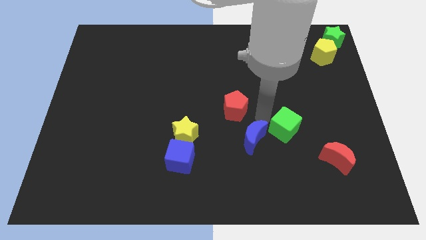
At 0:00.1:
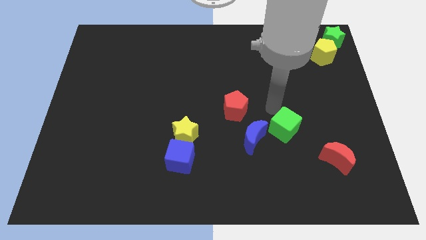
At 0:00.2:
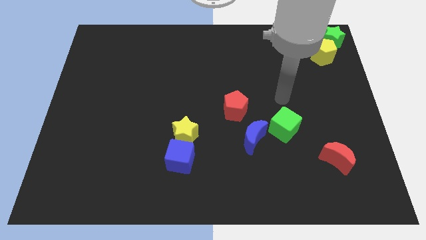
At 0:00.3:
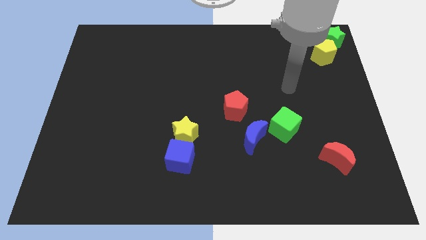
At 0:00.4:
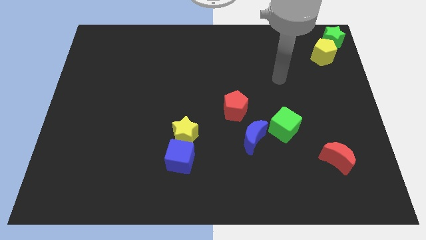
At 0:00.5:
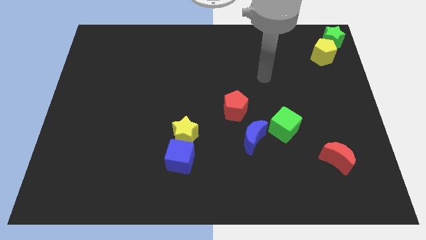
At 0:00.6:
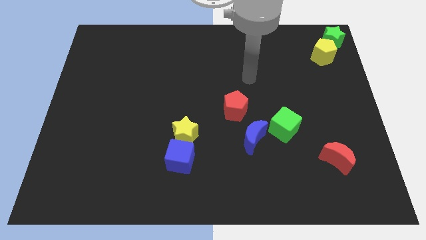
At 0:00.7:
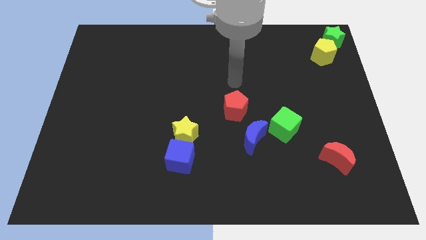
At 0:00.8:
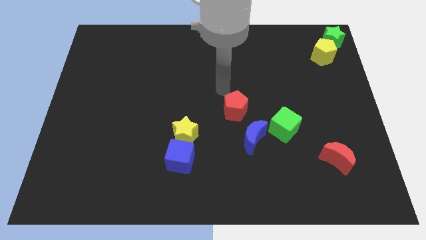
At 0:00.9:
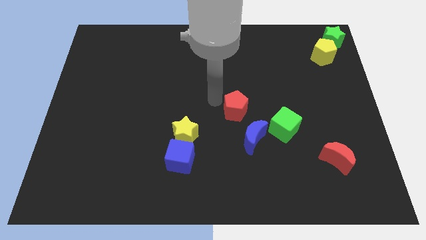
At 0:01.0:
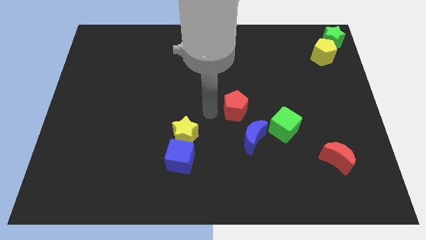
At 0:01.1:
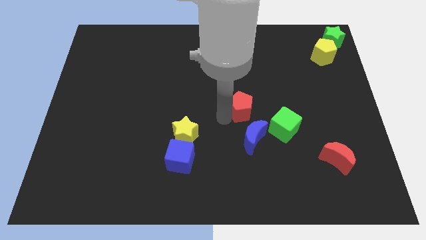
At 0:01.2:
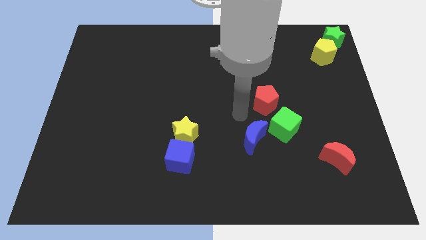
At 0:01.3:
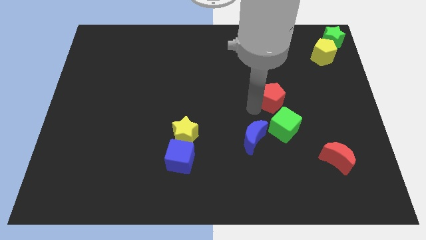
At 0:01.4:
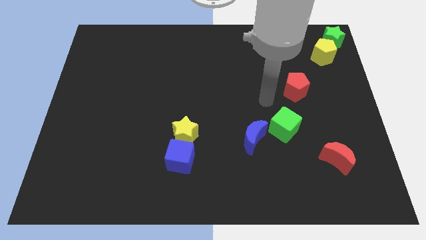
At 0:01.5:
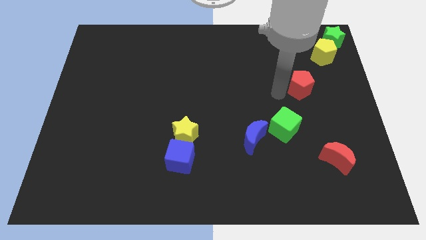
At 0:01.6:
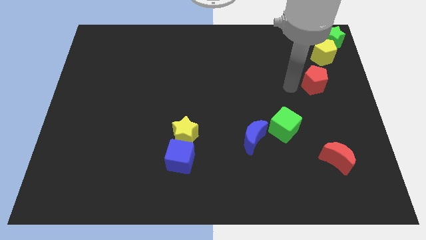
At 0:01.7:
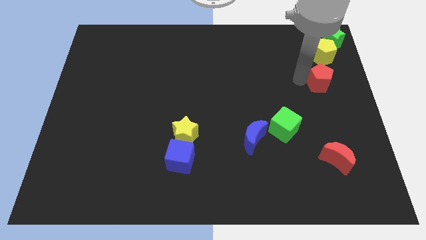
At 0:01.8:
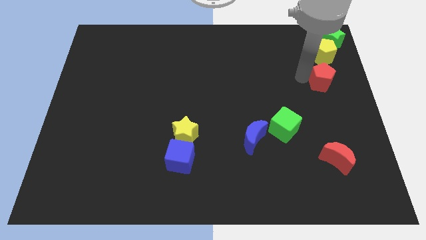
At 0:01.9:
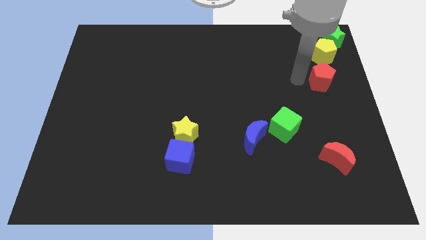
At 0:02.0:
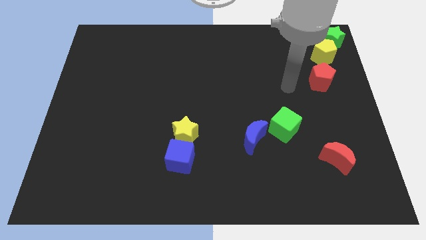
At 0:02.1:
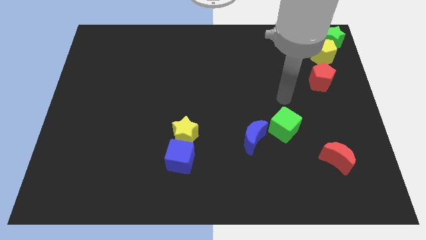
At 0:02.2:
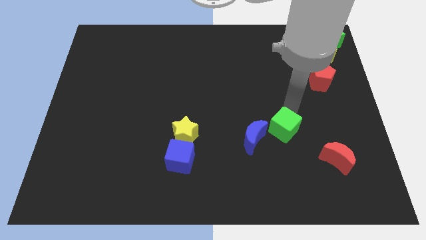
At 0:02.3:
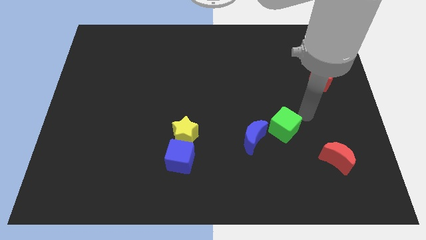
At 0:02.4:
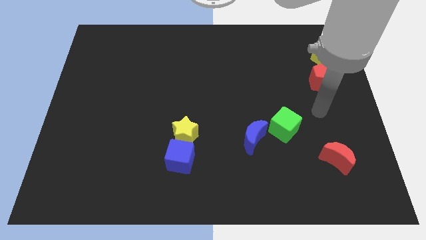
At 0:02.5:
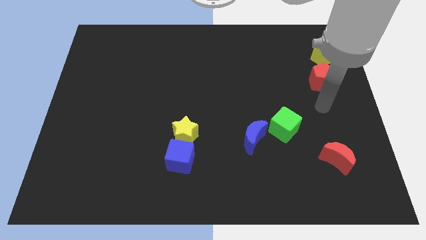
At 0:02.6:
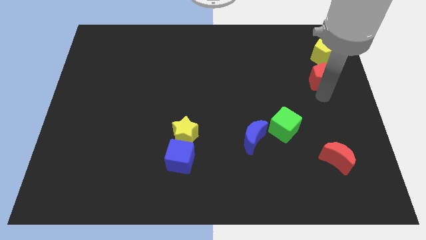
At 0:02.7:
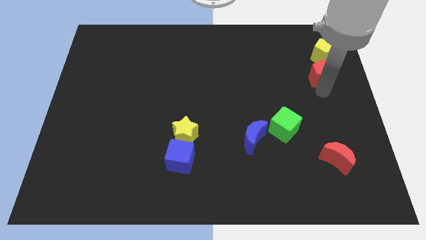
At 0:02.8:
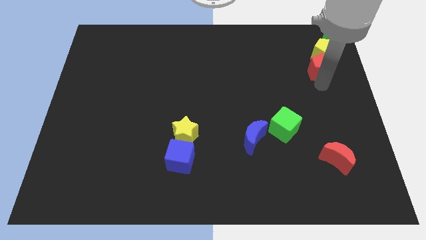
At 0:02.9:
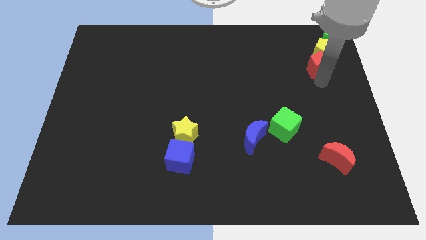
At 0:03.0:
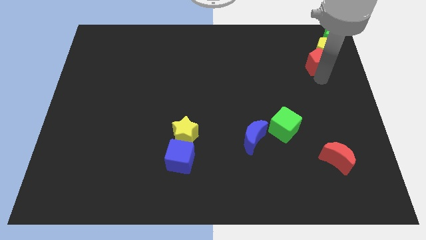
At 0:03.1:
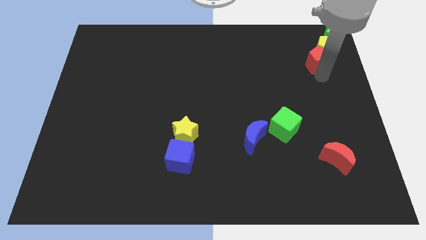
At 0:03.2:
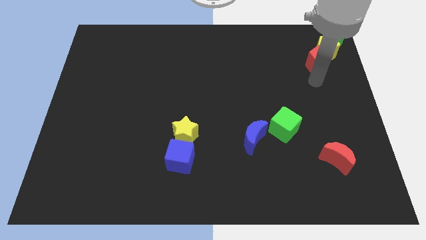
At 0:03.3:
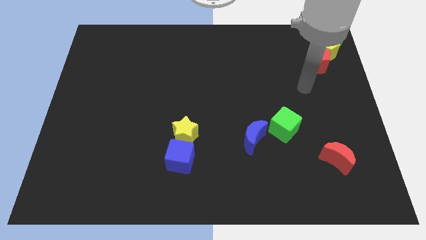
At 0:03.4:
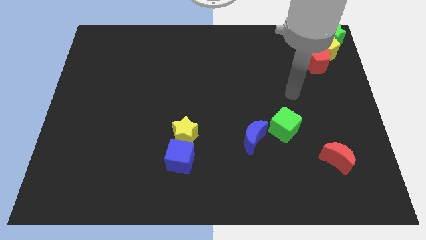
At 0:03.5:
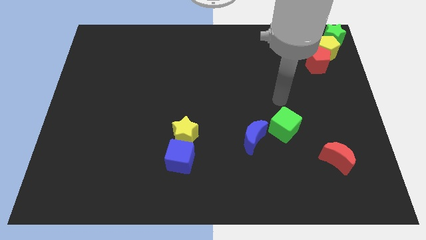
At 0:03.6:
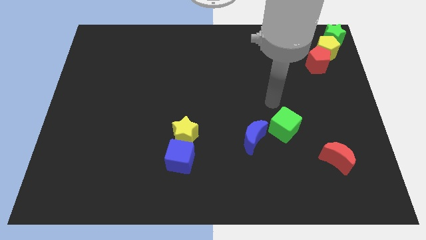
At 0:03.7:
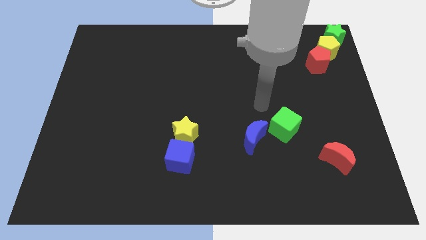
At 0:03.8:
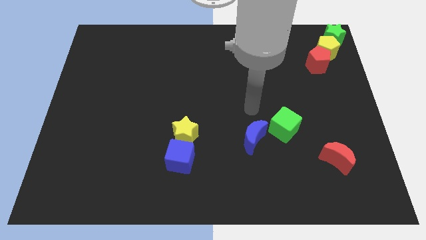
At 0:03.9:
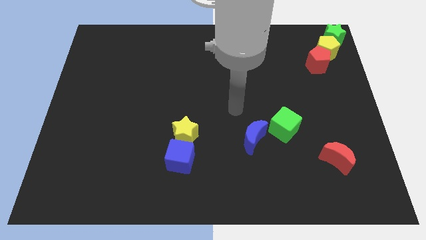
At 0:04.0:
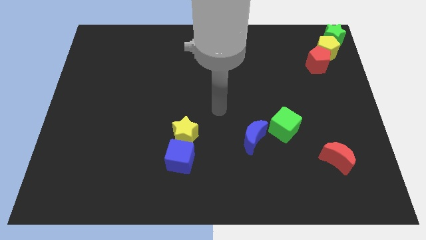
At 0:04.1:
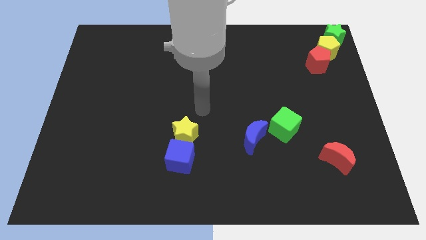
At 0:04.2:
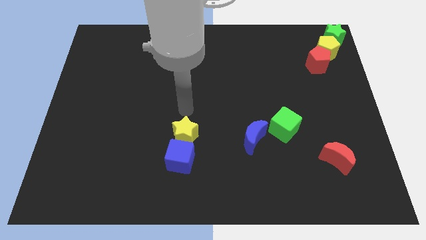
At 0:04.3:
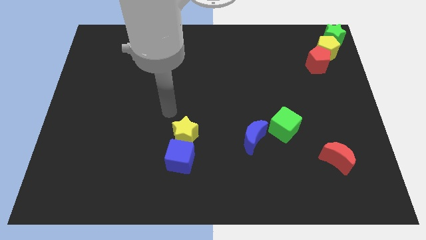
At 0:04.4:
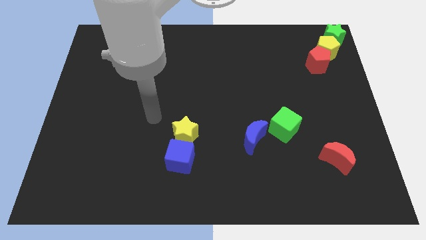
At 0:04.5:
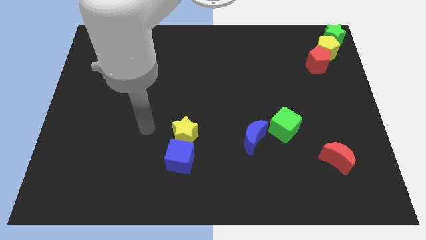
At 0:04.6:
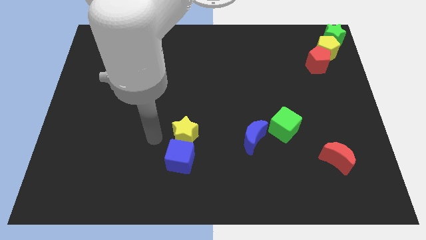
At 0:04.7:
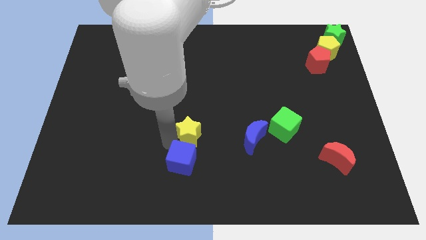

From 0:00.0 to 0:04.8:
push the red pentagon into the yellow pentagon

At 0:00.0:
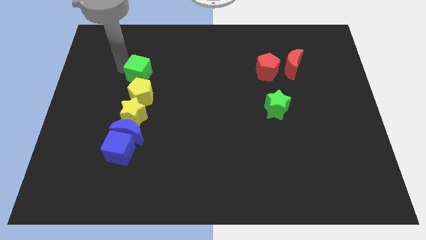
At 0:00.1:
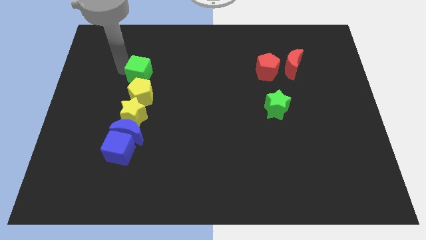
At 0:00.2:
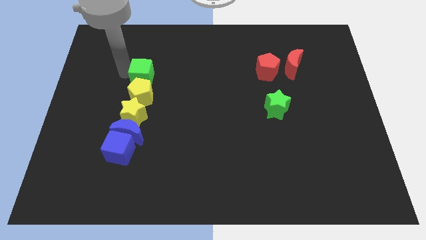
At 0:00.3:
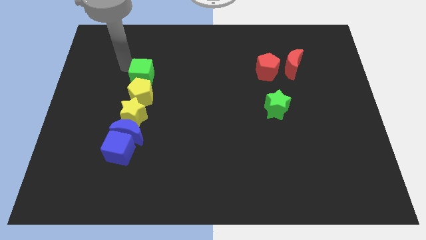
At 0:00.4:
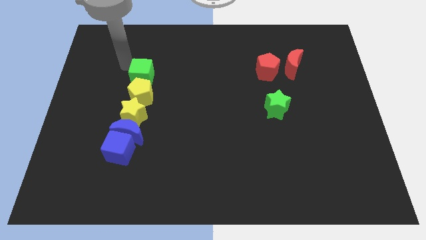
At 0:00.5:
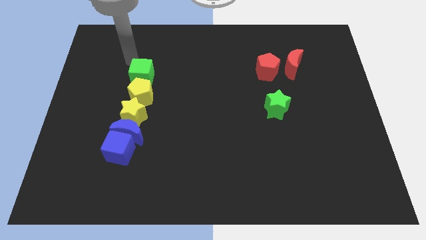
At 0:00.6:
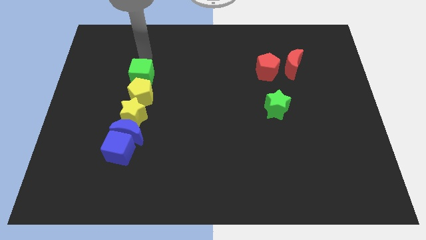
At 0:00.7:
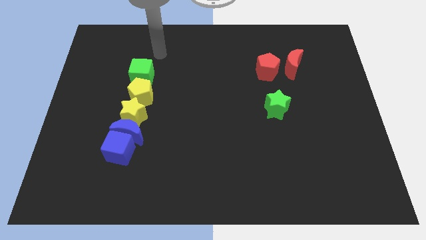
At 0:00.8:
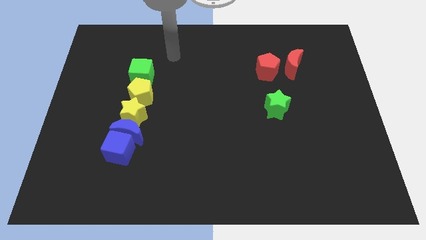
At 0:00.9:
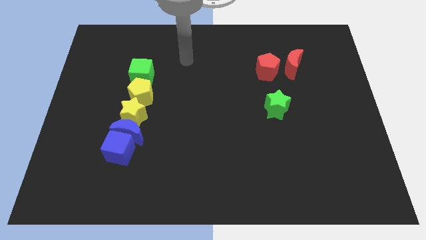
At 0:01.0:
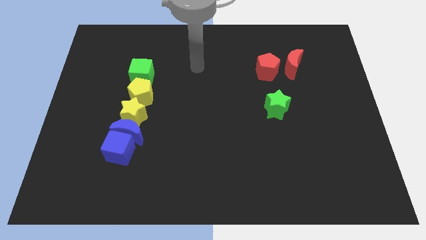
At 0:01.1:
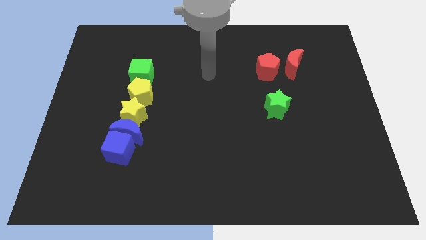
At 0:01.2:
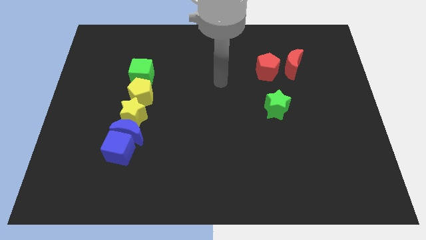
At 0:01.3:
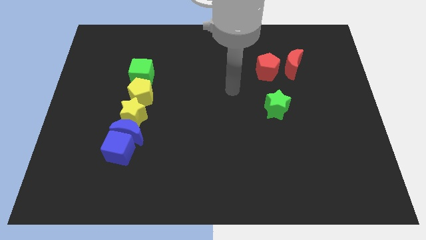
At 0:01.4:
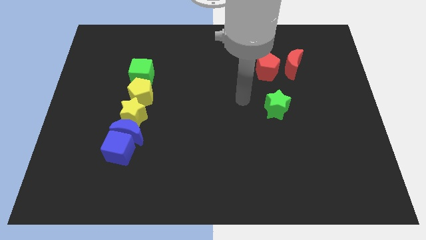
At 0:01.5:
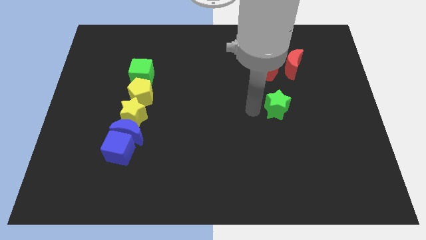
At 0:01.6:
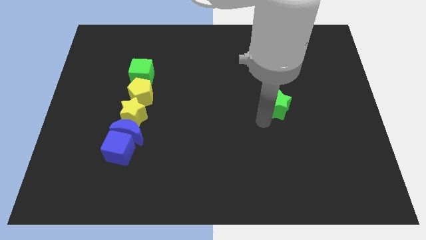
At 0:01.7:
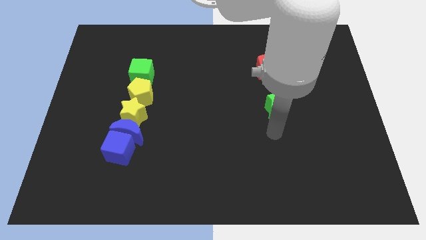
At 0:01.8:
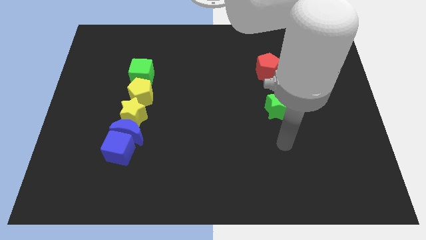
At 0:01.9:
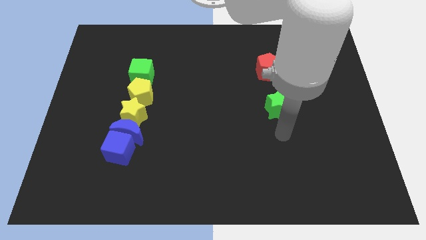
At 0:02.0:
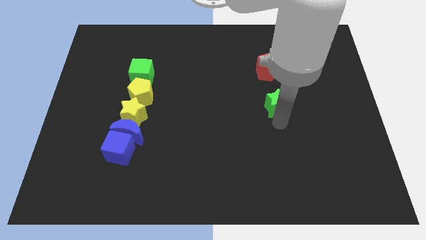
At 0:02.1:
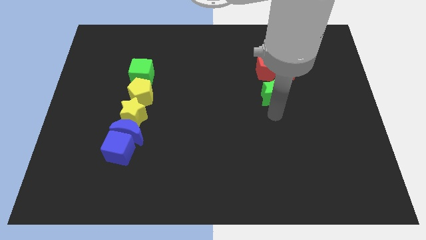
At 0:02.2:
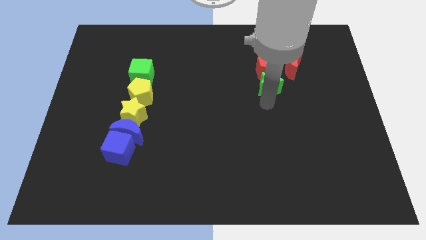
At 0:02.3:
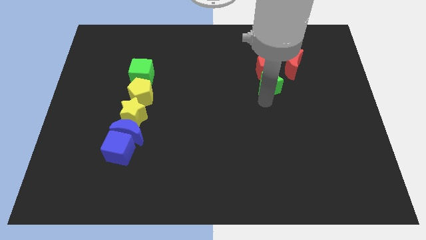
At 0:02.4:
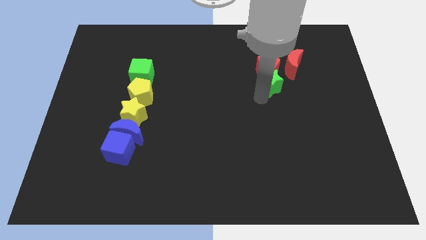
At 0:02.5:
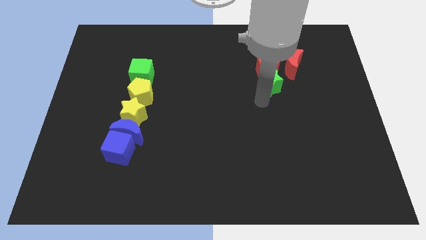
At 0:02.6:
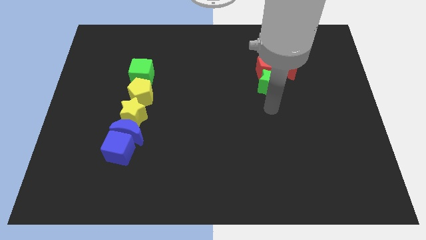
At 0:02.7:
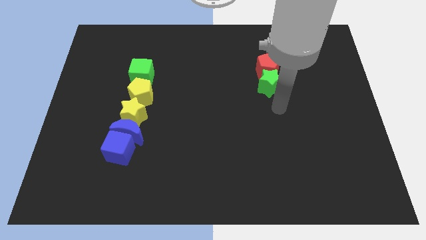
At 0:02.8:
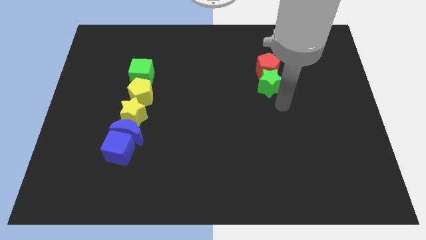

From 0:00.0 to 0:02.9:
push the green star into the red pentagon

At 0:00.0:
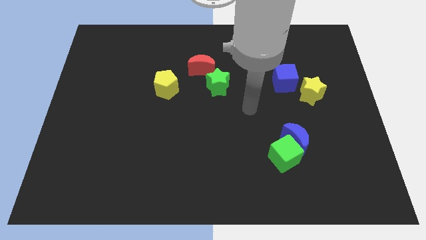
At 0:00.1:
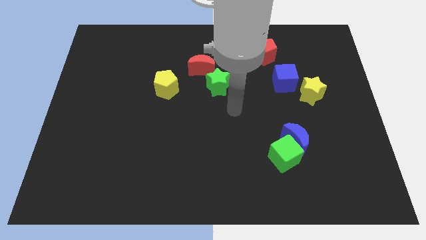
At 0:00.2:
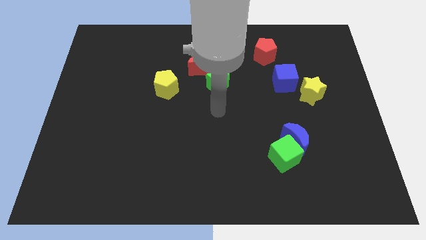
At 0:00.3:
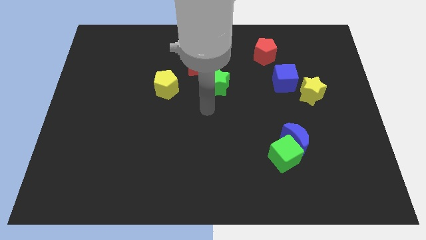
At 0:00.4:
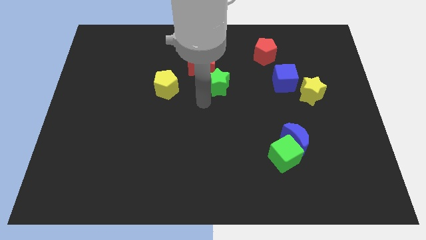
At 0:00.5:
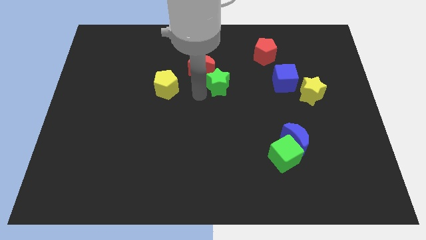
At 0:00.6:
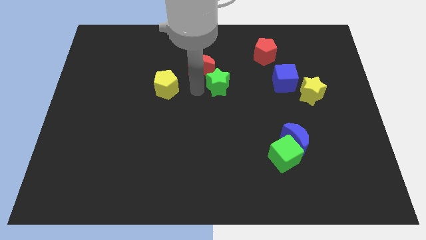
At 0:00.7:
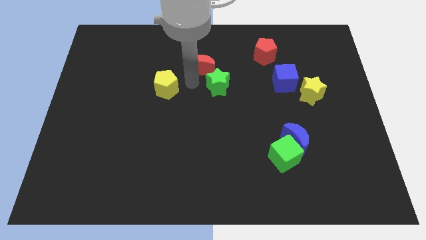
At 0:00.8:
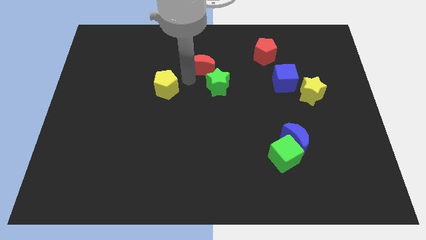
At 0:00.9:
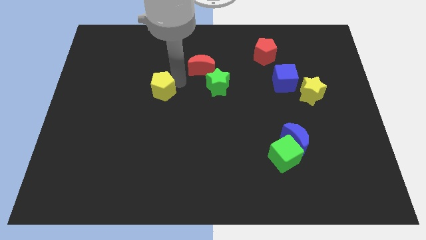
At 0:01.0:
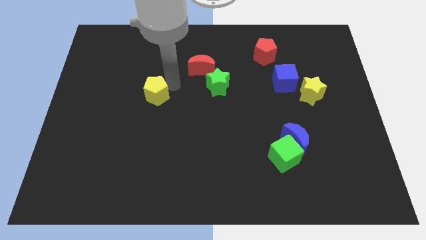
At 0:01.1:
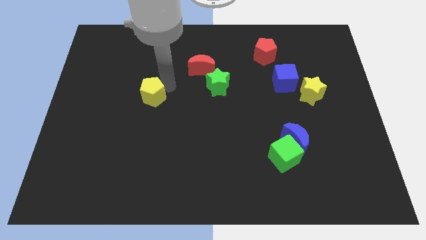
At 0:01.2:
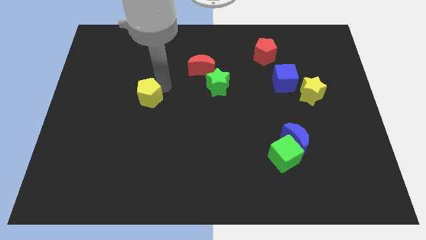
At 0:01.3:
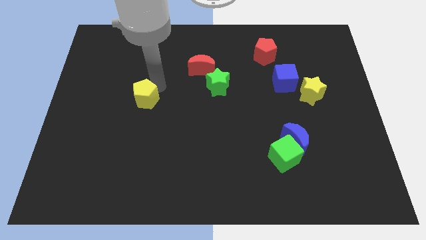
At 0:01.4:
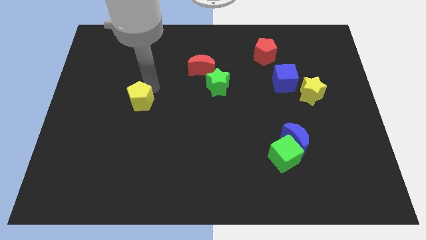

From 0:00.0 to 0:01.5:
push the yellow pentagon towards left side
